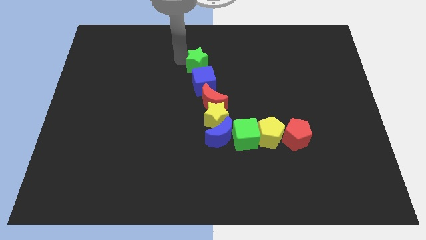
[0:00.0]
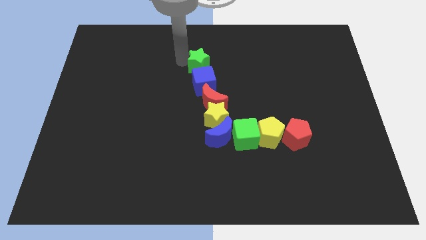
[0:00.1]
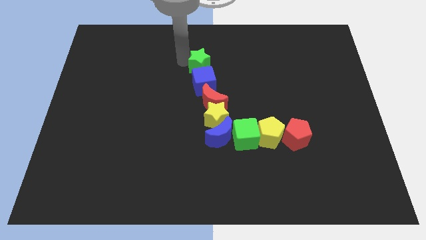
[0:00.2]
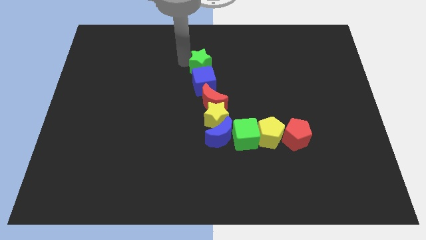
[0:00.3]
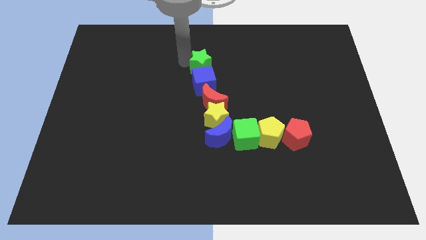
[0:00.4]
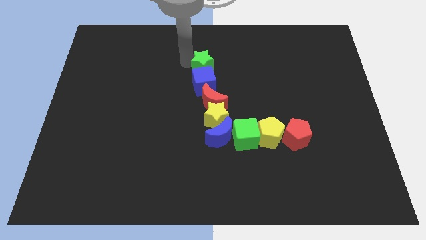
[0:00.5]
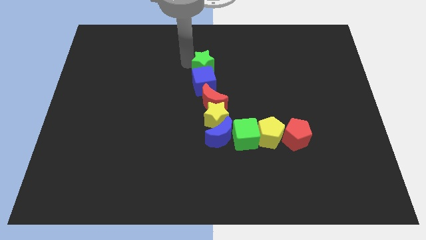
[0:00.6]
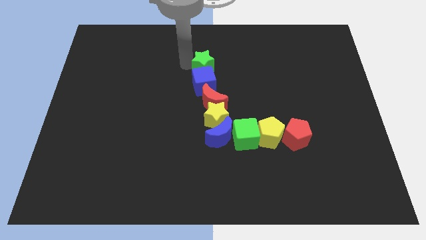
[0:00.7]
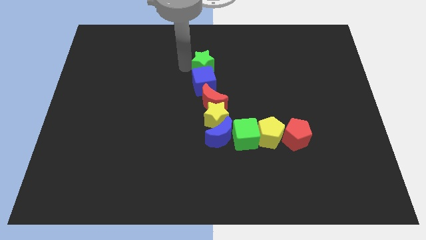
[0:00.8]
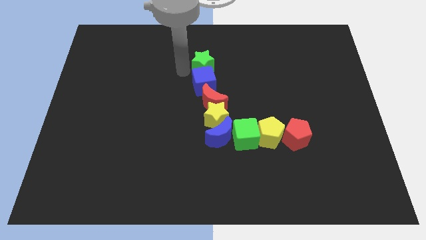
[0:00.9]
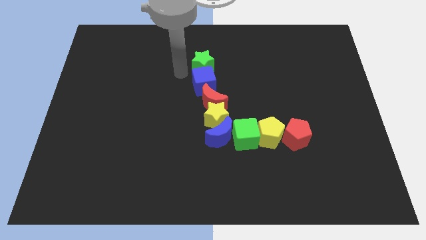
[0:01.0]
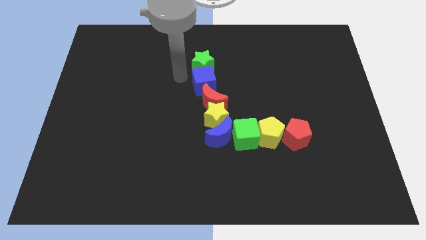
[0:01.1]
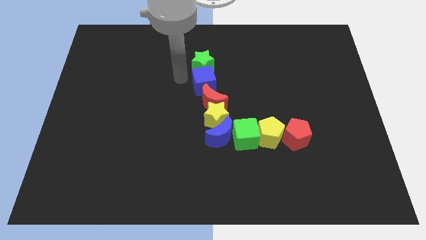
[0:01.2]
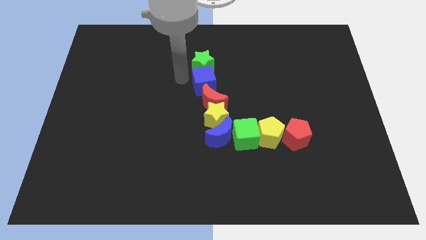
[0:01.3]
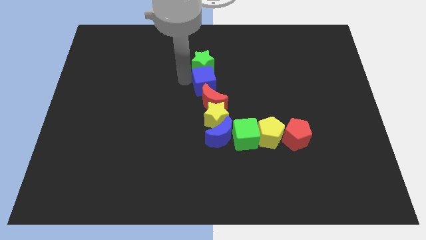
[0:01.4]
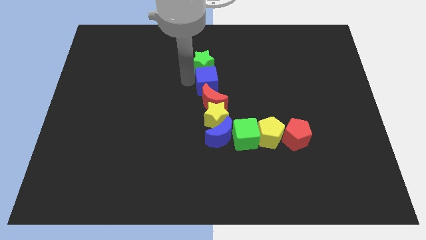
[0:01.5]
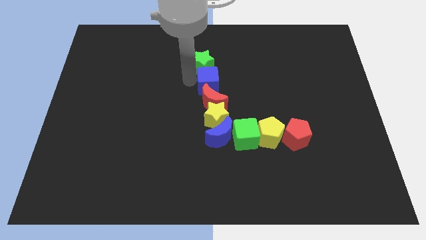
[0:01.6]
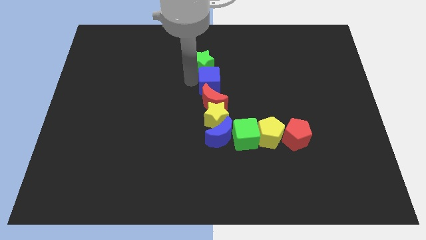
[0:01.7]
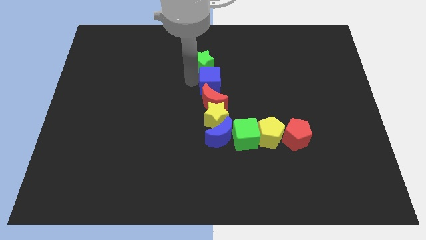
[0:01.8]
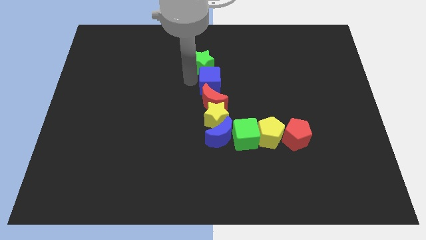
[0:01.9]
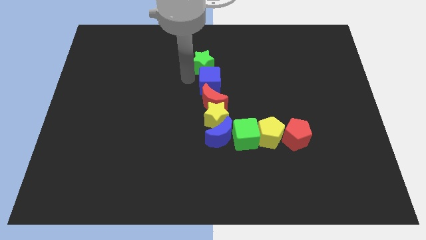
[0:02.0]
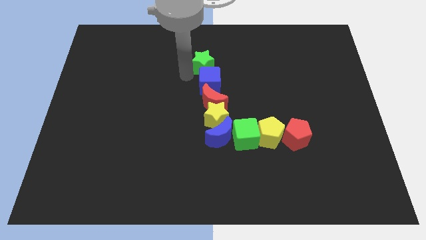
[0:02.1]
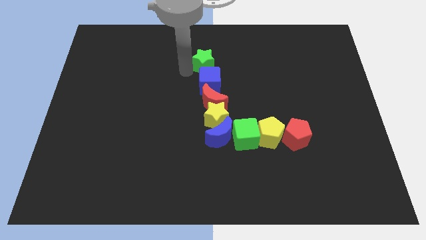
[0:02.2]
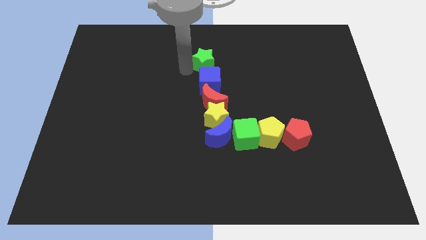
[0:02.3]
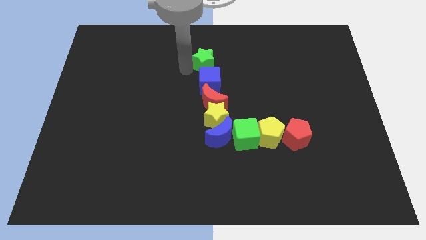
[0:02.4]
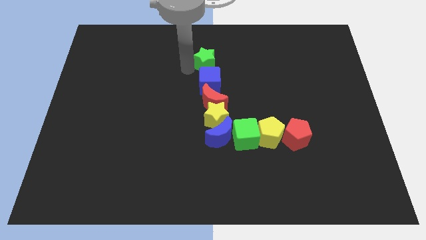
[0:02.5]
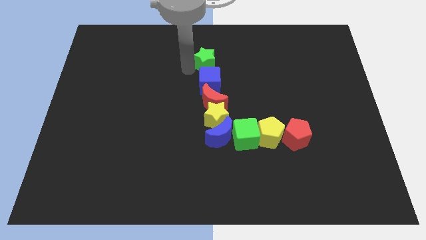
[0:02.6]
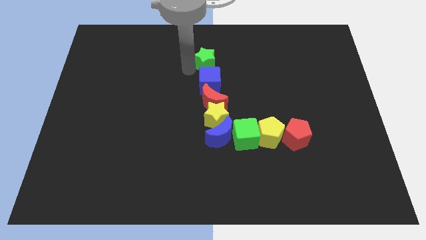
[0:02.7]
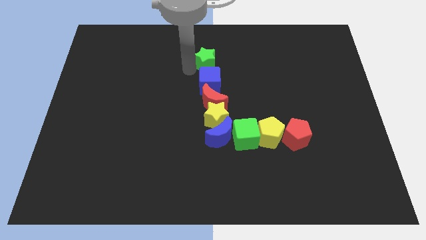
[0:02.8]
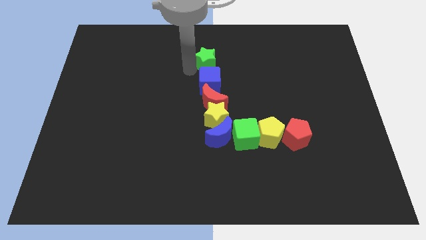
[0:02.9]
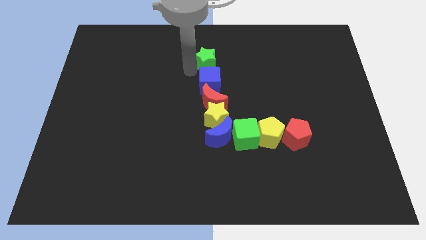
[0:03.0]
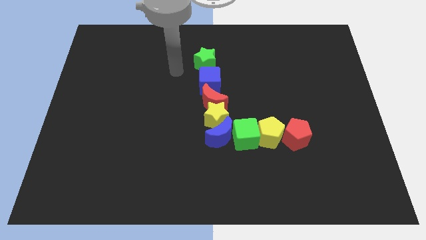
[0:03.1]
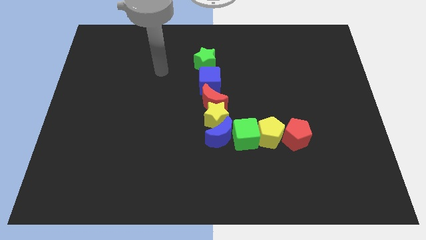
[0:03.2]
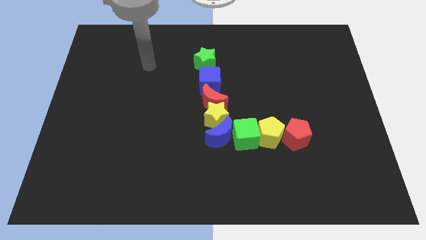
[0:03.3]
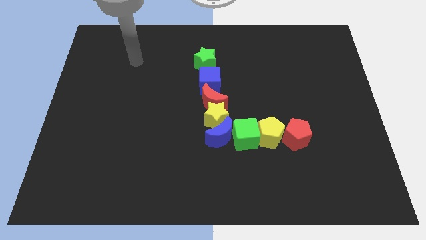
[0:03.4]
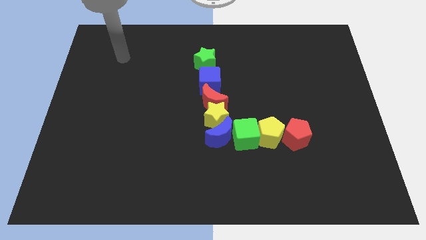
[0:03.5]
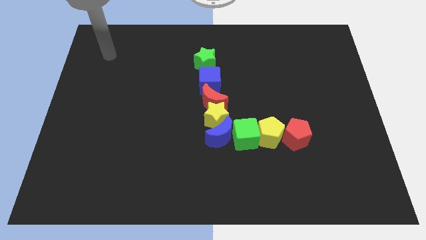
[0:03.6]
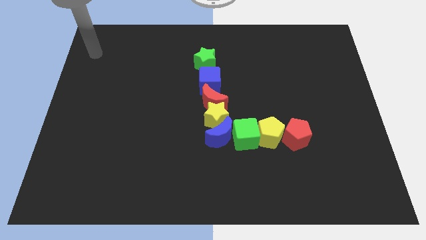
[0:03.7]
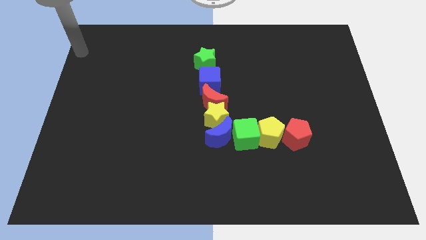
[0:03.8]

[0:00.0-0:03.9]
adjust both the green star and blue cube diagonally on the top left side of the red moon

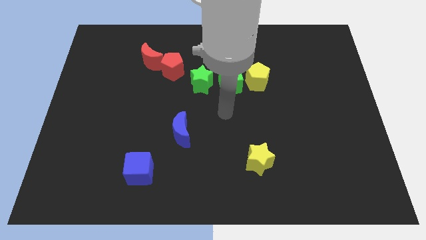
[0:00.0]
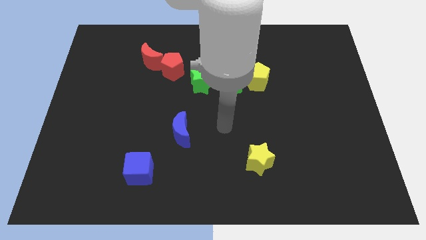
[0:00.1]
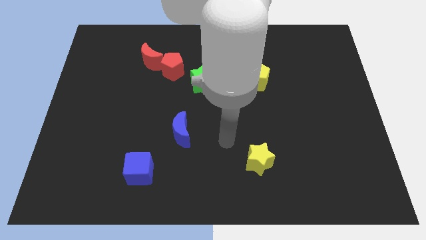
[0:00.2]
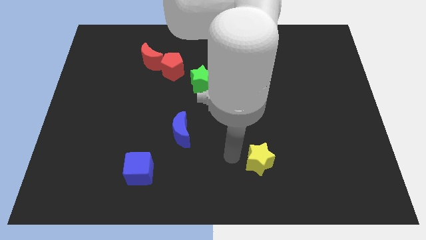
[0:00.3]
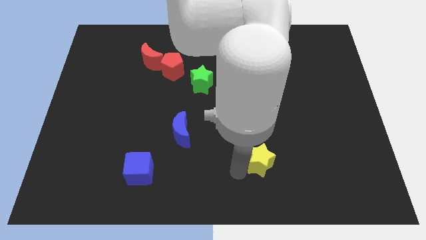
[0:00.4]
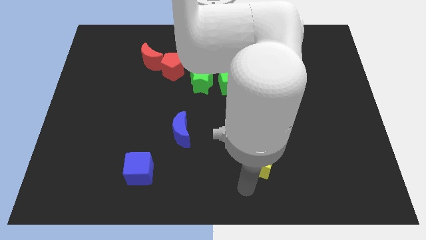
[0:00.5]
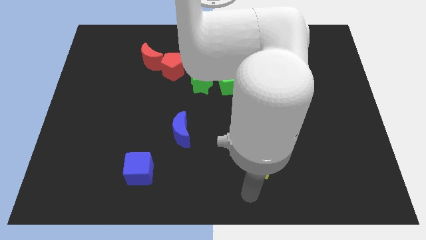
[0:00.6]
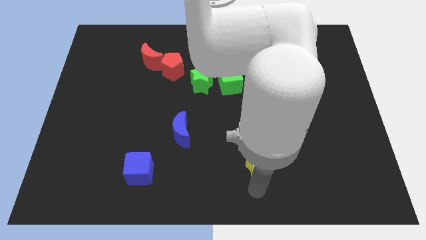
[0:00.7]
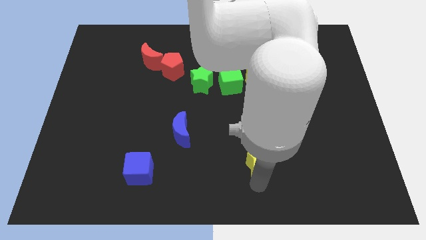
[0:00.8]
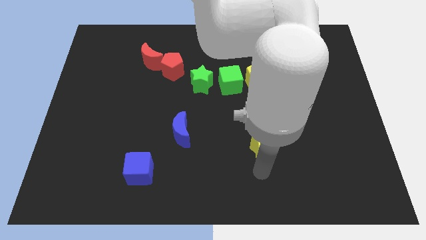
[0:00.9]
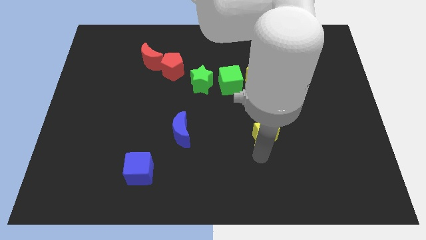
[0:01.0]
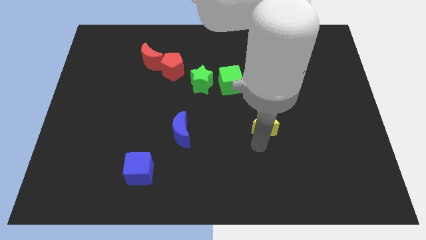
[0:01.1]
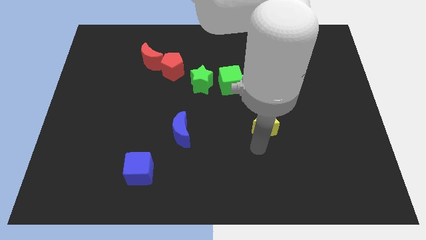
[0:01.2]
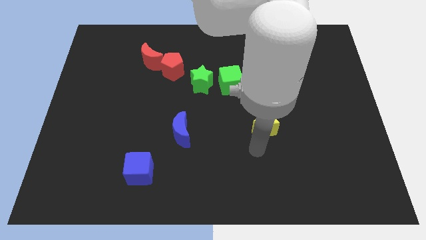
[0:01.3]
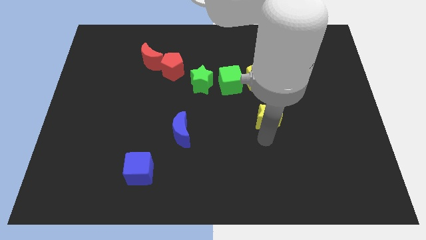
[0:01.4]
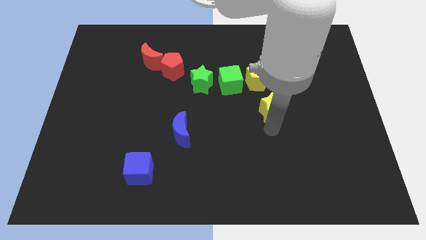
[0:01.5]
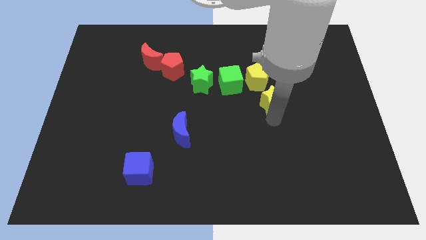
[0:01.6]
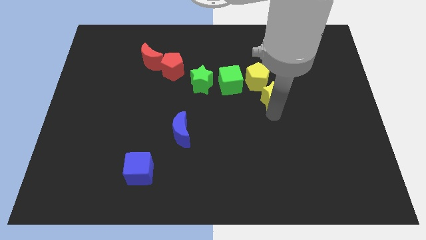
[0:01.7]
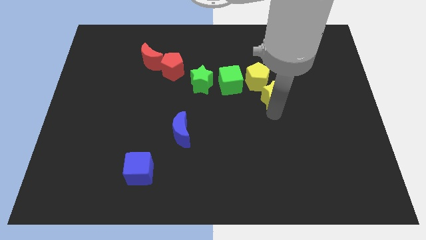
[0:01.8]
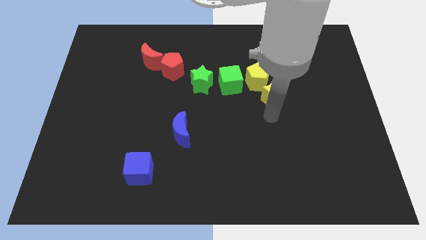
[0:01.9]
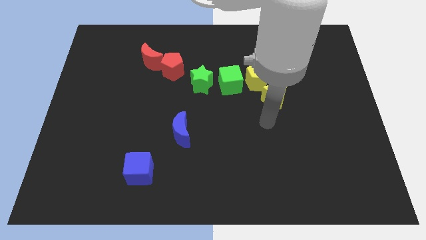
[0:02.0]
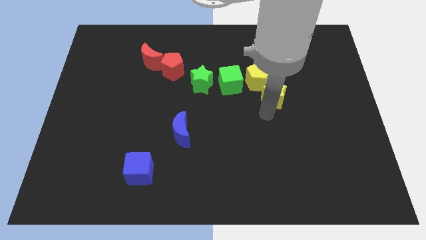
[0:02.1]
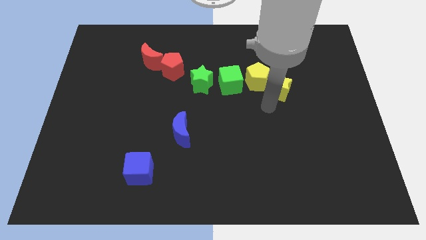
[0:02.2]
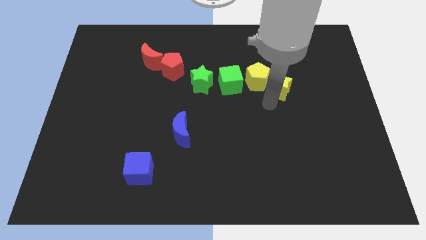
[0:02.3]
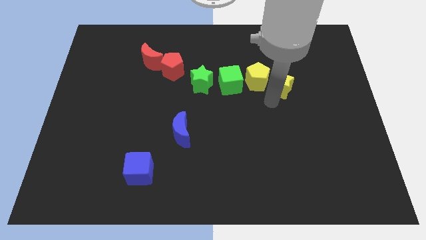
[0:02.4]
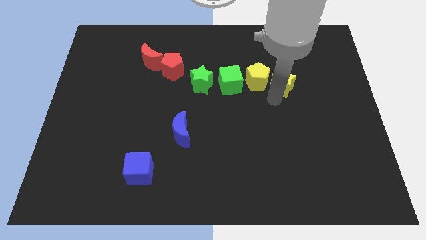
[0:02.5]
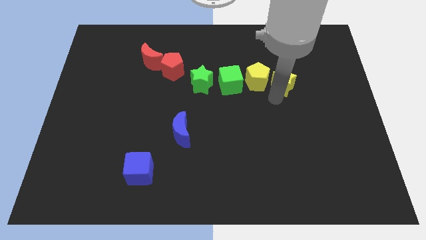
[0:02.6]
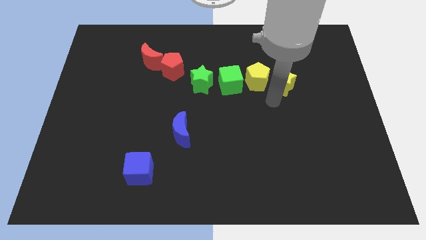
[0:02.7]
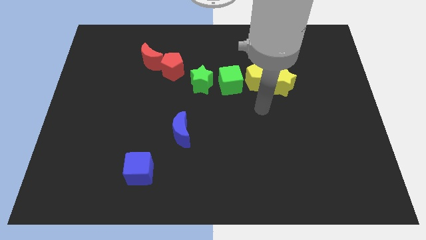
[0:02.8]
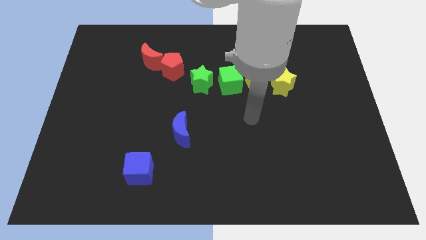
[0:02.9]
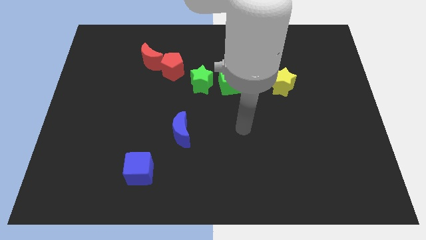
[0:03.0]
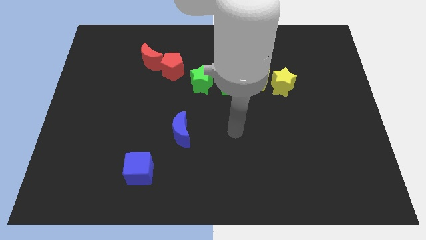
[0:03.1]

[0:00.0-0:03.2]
push the yellow star right to the yellow pentagon

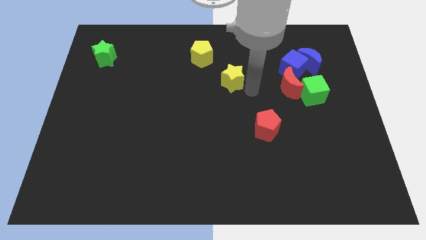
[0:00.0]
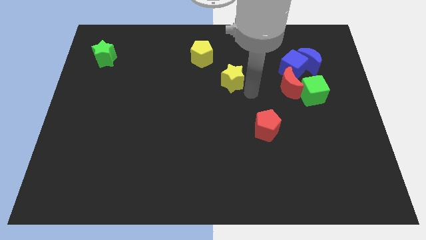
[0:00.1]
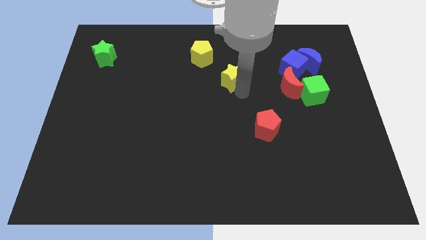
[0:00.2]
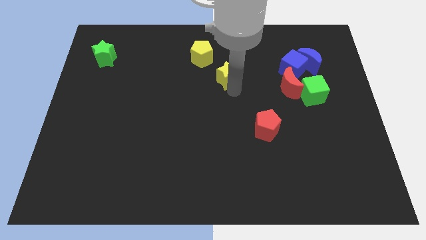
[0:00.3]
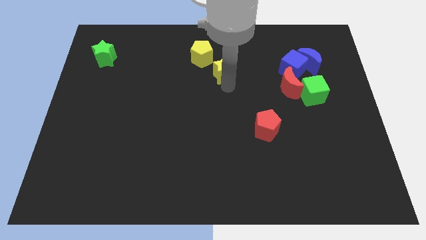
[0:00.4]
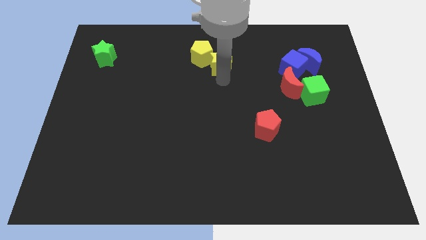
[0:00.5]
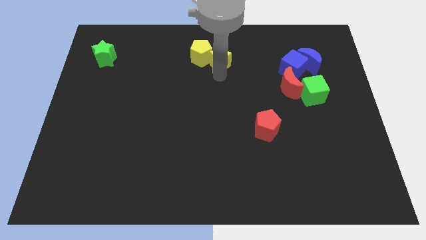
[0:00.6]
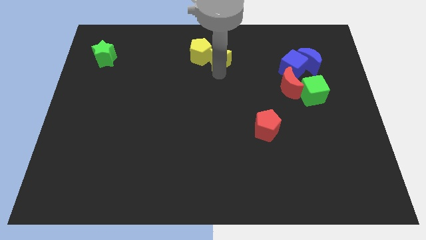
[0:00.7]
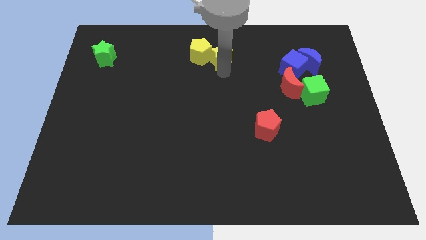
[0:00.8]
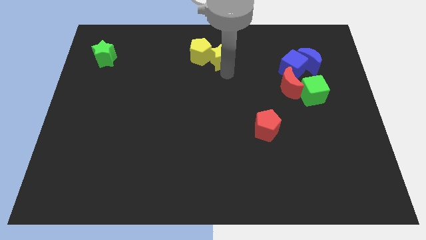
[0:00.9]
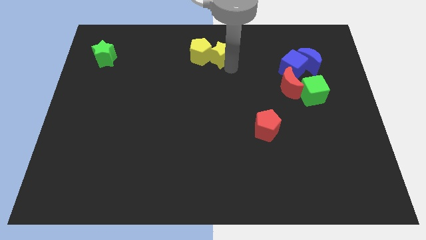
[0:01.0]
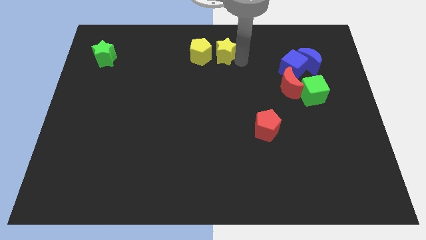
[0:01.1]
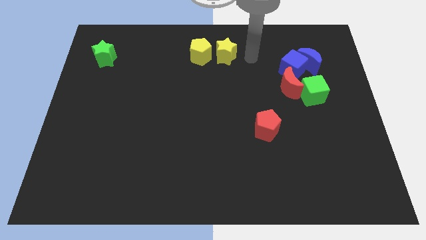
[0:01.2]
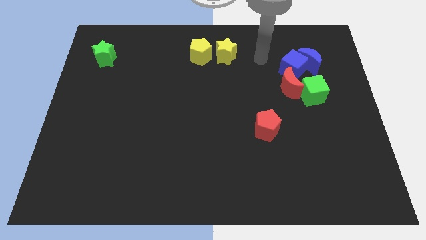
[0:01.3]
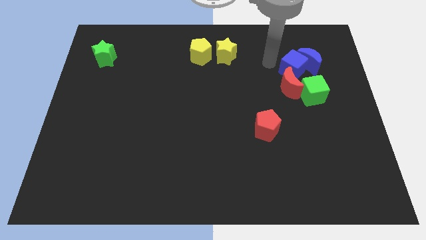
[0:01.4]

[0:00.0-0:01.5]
place the yellow star to the right side of the yellow pentagon

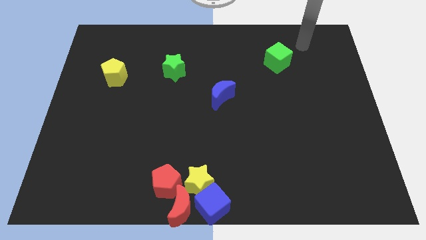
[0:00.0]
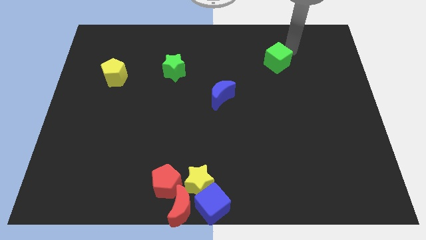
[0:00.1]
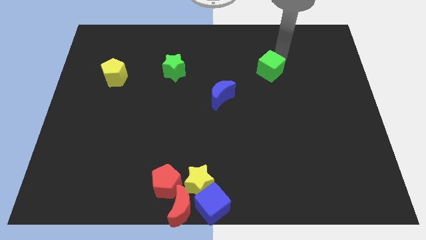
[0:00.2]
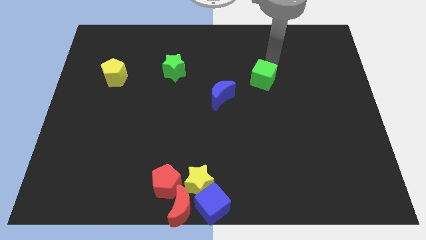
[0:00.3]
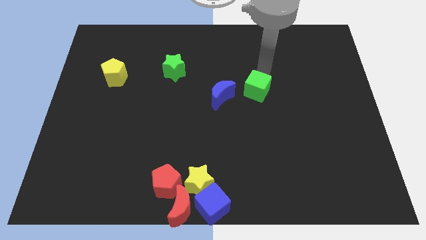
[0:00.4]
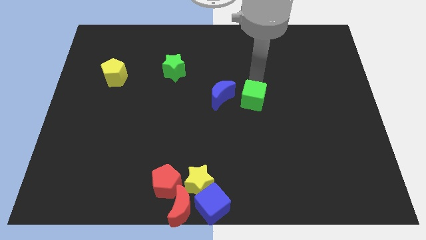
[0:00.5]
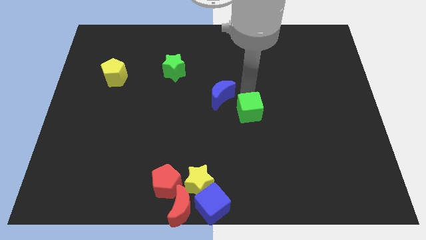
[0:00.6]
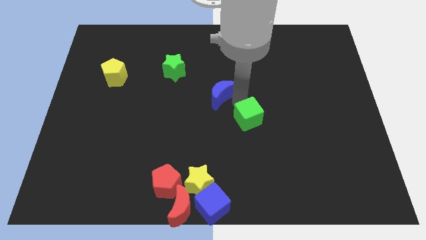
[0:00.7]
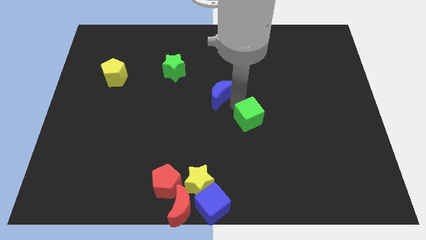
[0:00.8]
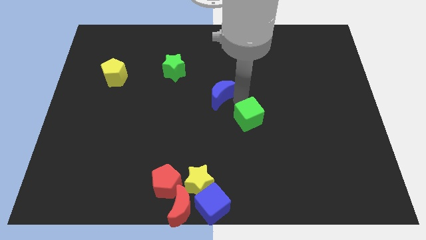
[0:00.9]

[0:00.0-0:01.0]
move the green cube towards the center of the board
